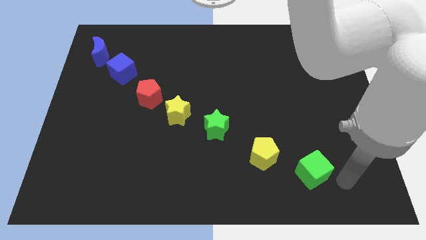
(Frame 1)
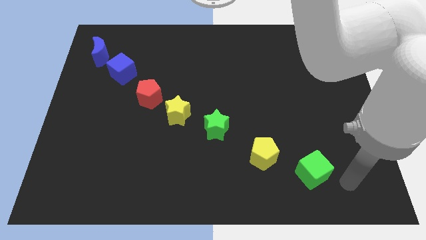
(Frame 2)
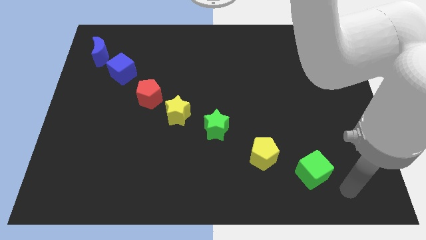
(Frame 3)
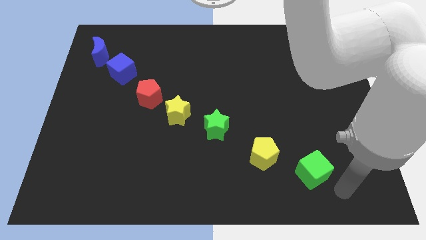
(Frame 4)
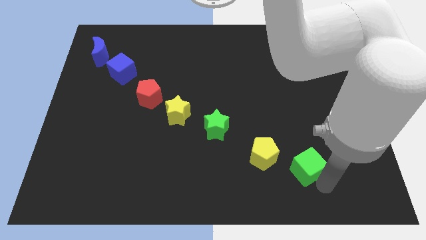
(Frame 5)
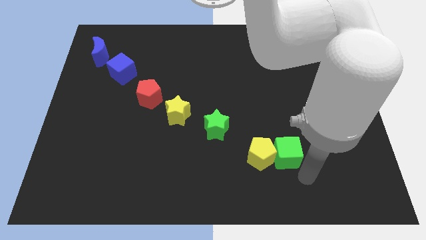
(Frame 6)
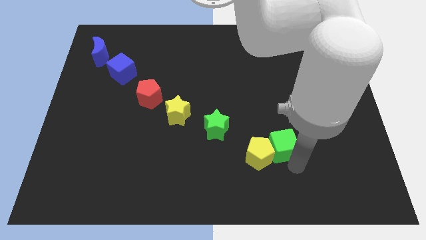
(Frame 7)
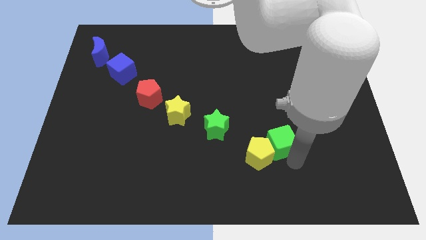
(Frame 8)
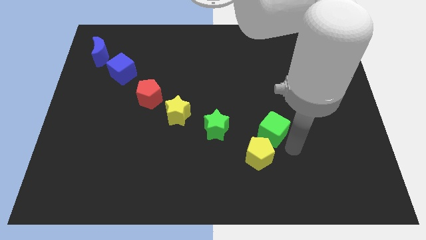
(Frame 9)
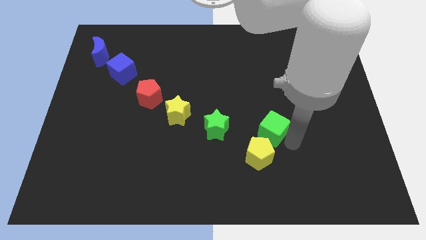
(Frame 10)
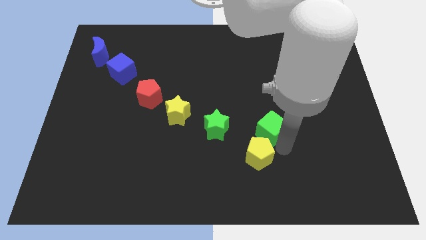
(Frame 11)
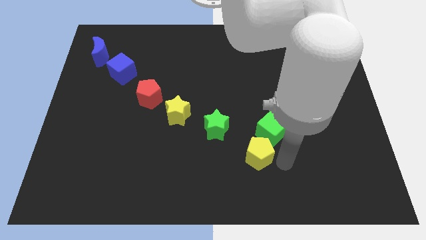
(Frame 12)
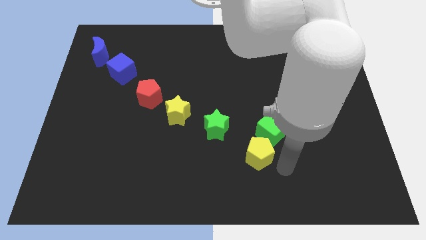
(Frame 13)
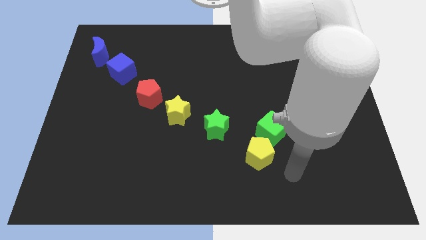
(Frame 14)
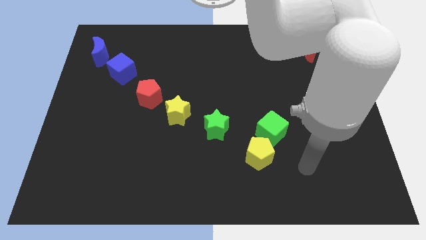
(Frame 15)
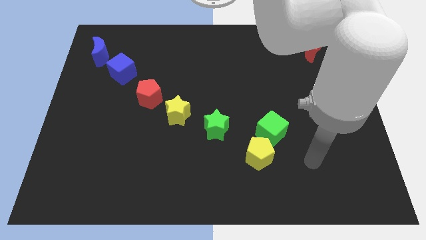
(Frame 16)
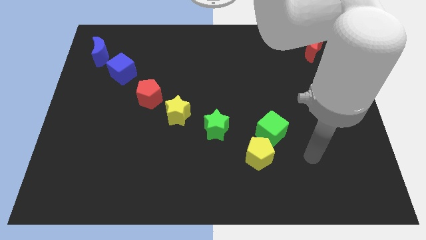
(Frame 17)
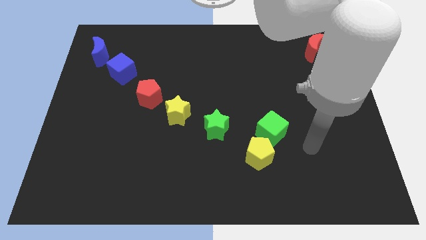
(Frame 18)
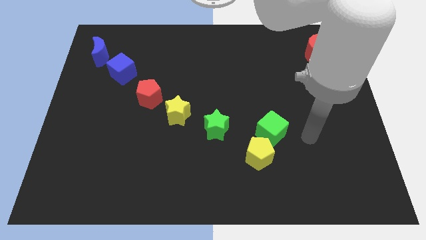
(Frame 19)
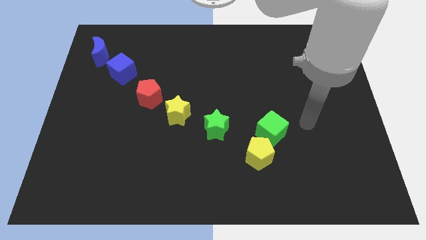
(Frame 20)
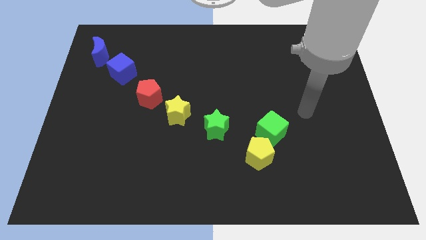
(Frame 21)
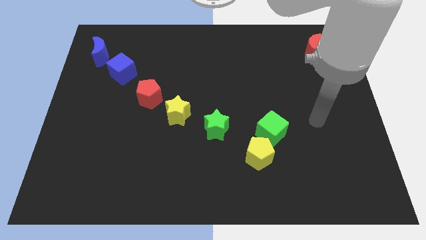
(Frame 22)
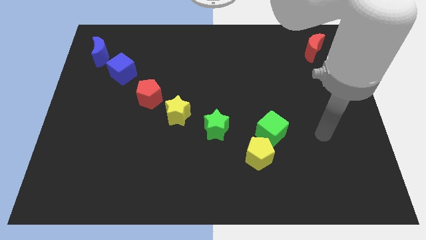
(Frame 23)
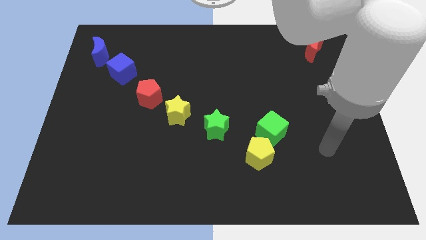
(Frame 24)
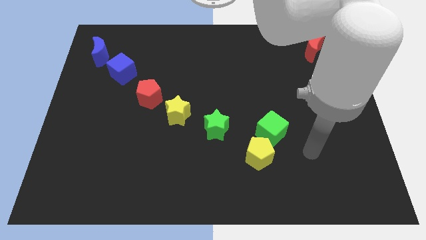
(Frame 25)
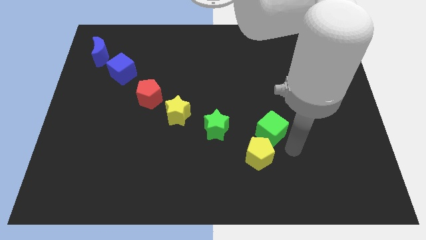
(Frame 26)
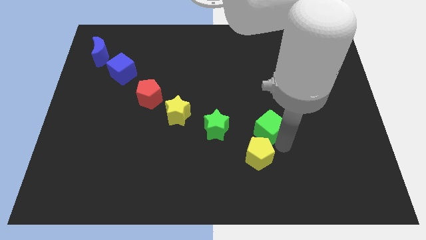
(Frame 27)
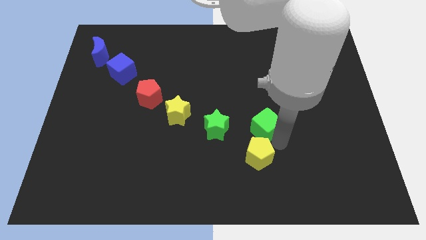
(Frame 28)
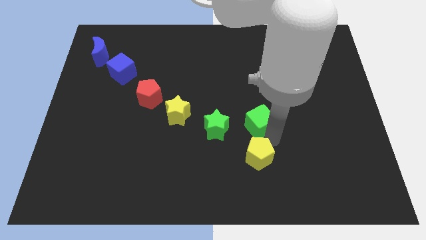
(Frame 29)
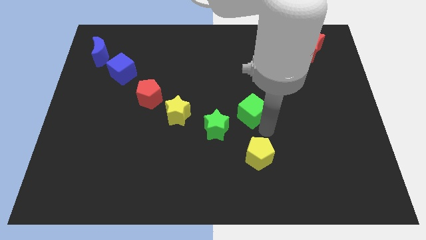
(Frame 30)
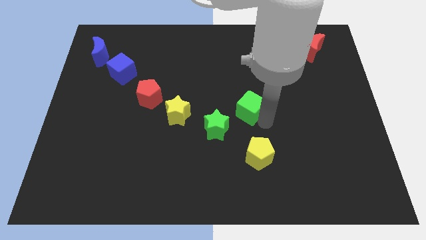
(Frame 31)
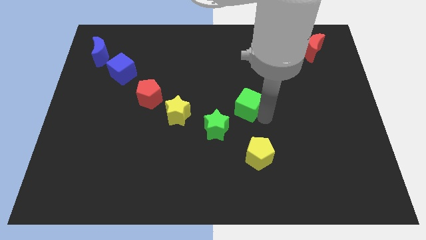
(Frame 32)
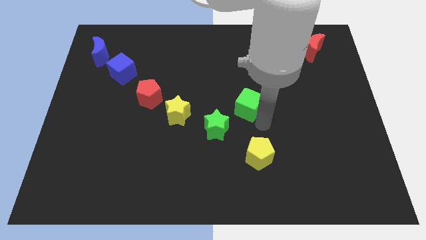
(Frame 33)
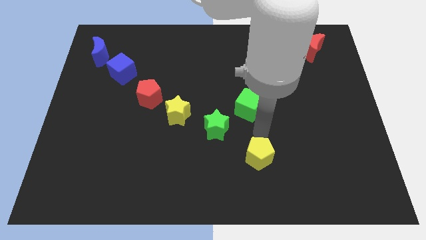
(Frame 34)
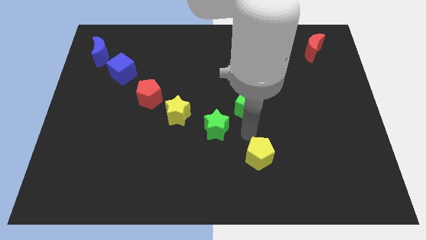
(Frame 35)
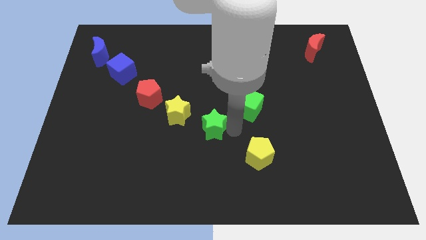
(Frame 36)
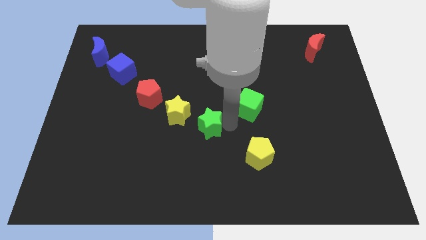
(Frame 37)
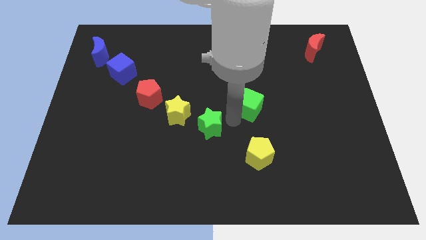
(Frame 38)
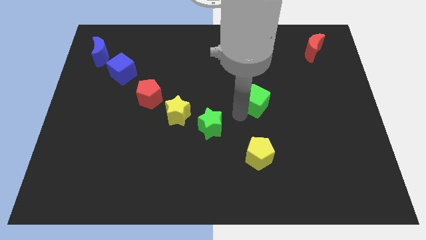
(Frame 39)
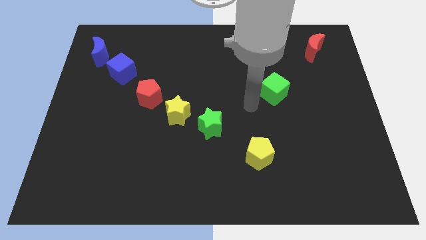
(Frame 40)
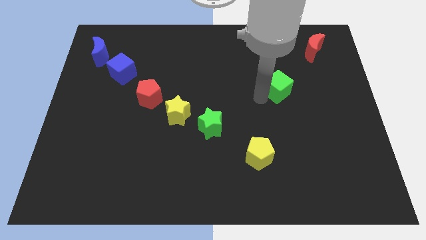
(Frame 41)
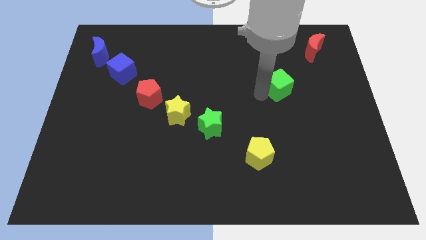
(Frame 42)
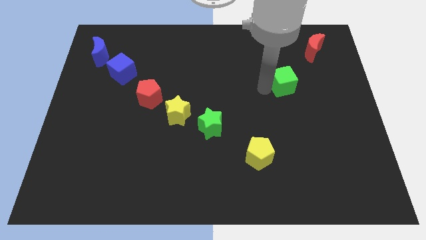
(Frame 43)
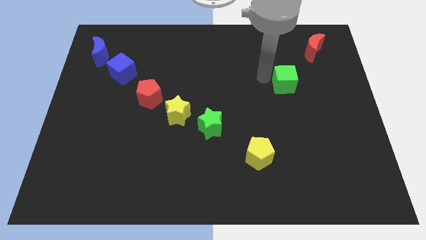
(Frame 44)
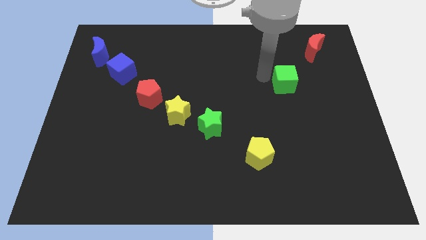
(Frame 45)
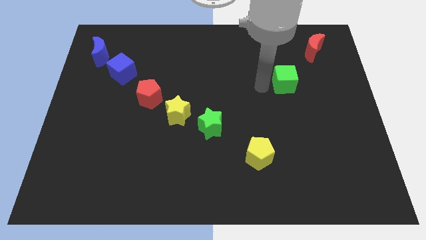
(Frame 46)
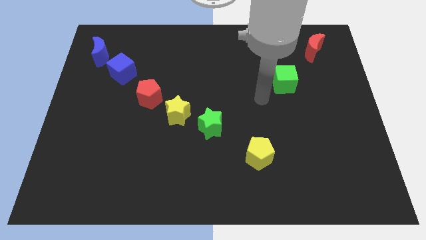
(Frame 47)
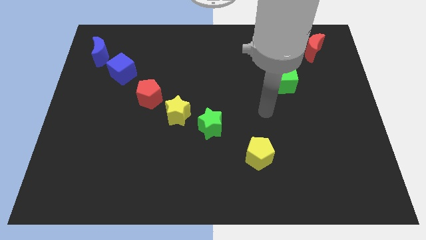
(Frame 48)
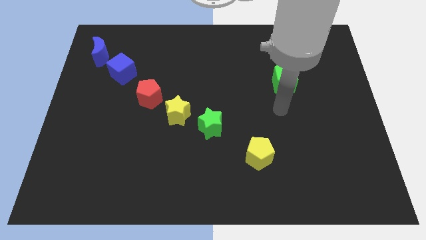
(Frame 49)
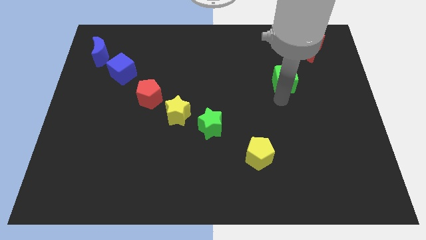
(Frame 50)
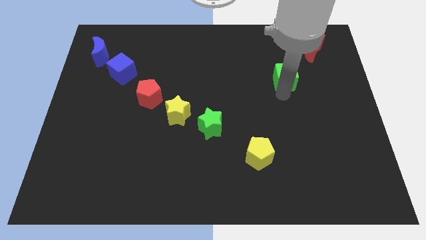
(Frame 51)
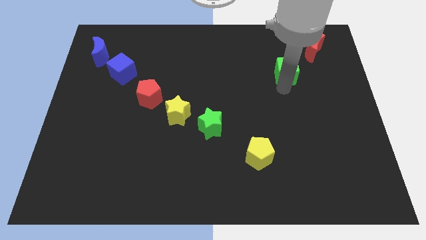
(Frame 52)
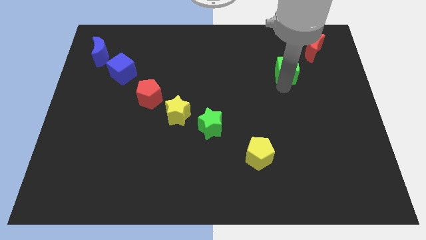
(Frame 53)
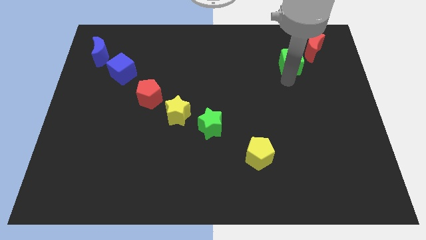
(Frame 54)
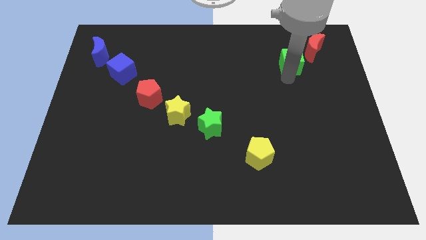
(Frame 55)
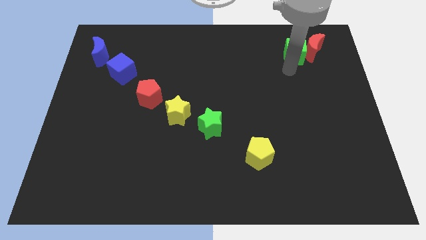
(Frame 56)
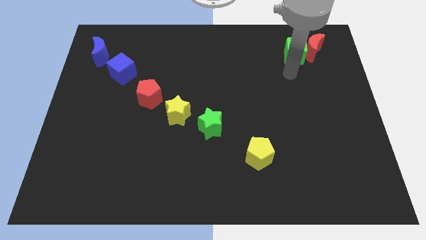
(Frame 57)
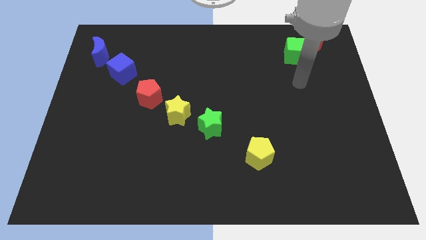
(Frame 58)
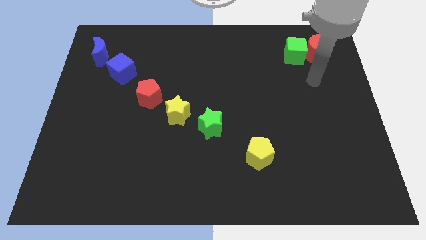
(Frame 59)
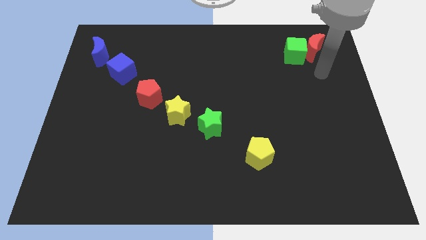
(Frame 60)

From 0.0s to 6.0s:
push the green cube into the red crescent

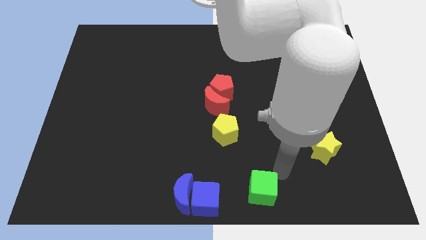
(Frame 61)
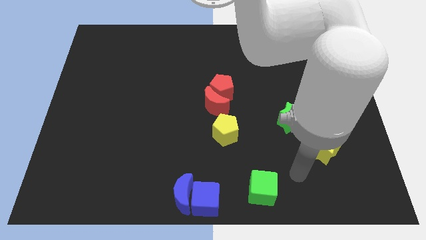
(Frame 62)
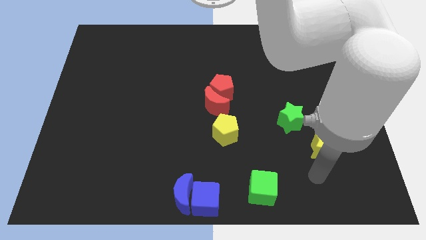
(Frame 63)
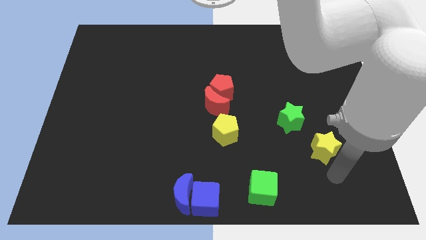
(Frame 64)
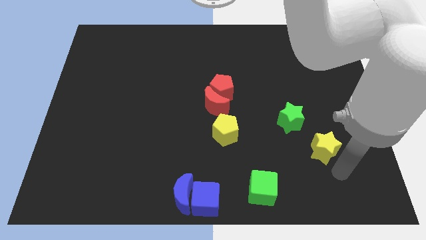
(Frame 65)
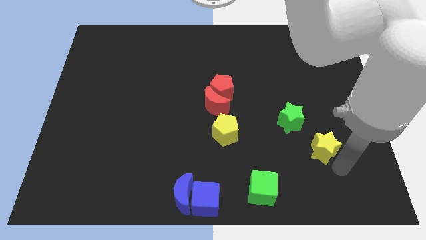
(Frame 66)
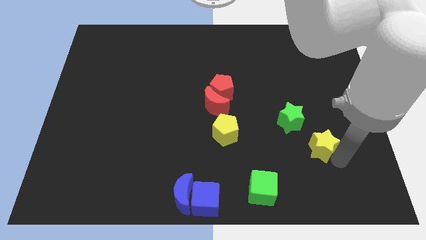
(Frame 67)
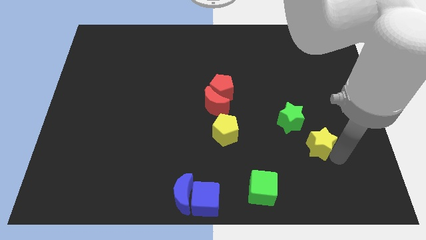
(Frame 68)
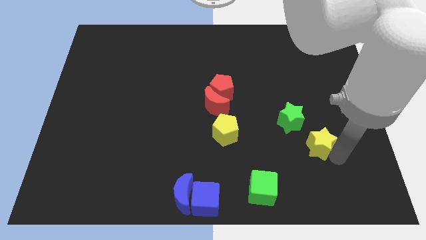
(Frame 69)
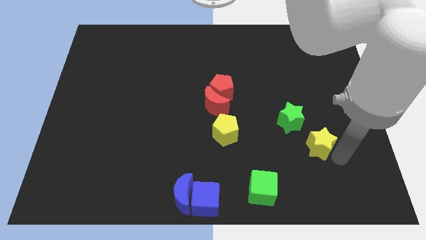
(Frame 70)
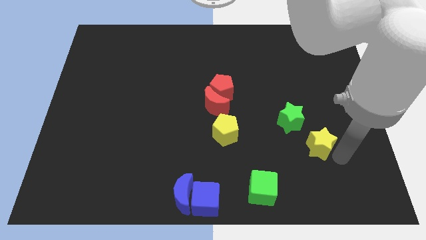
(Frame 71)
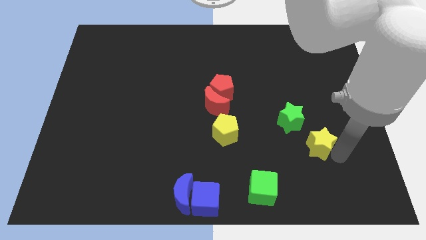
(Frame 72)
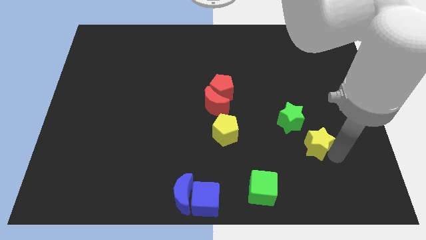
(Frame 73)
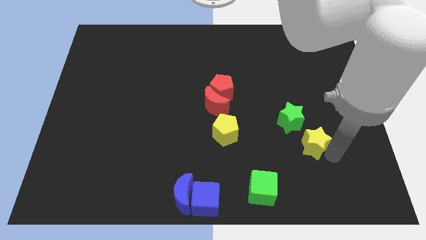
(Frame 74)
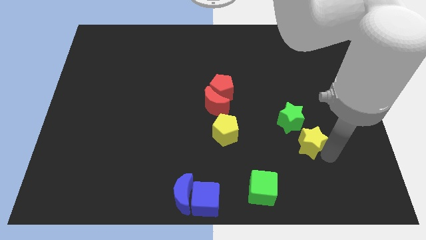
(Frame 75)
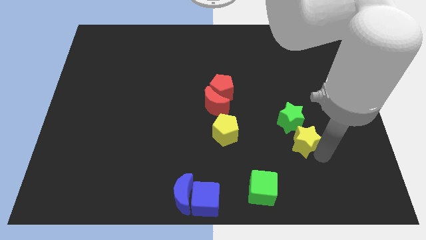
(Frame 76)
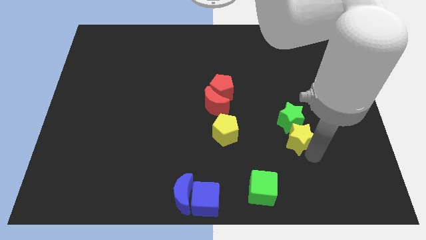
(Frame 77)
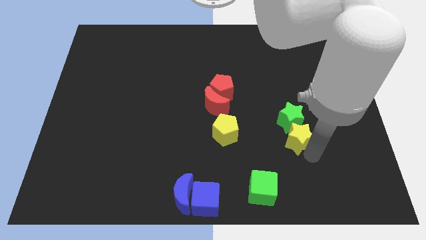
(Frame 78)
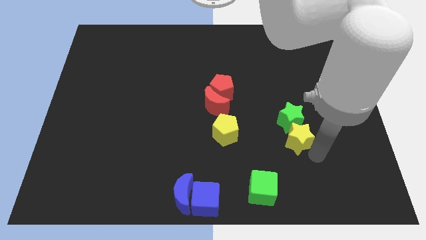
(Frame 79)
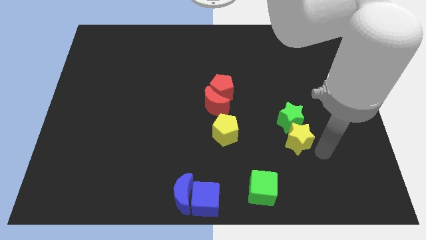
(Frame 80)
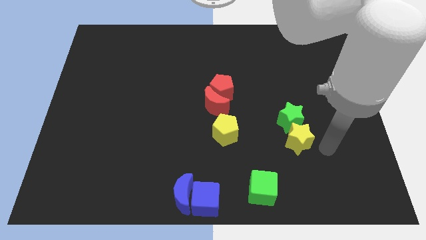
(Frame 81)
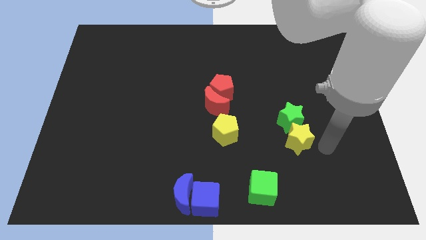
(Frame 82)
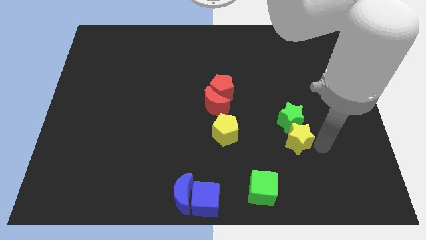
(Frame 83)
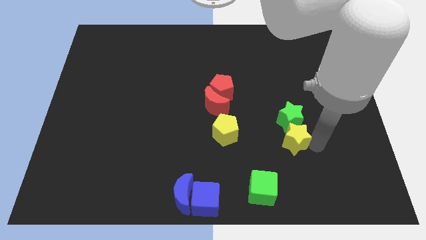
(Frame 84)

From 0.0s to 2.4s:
push the yellow star into the green star

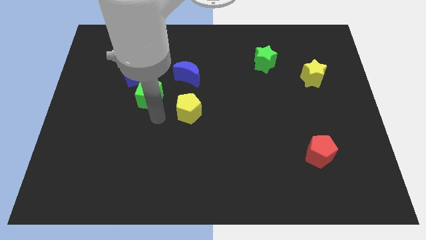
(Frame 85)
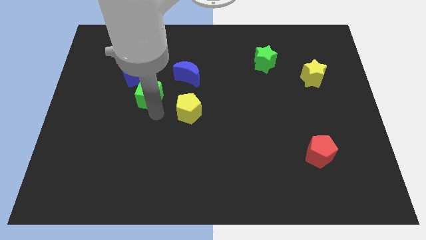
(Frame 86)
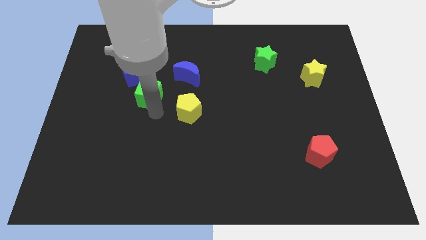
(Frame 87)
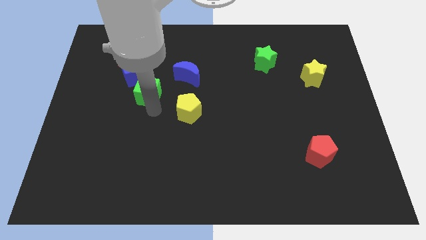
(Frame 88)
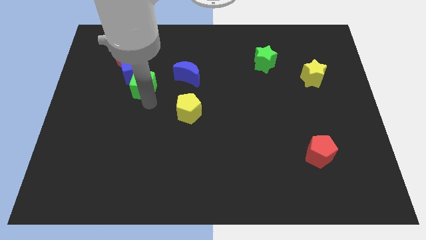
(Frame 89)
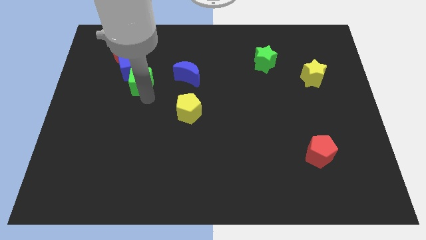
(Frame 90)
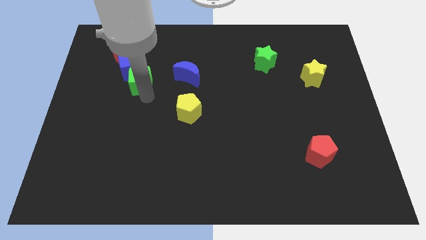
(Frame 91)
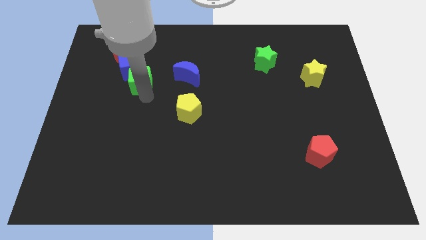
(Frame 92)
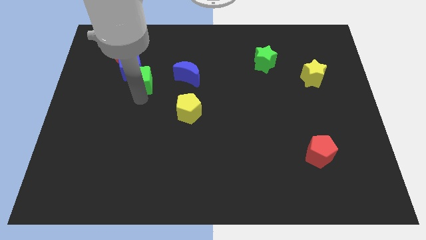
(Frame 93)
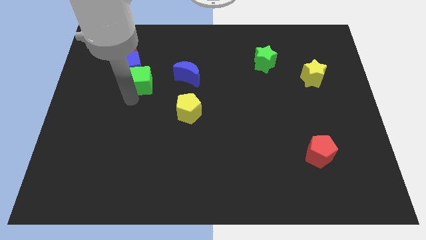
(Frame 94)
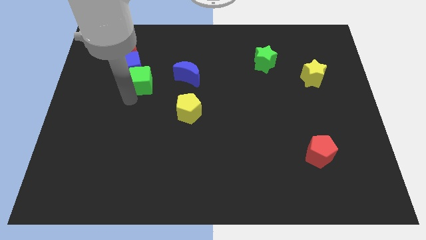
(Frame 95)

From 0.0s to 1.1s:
push the green cube into blue cube
